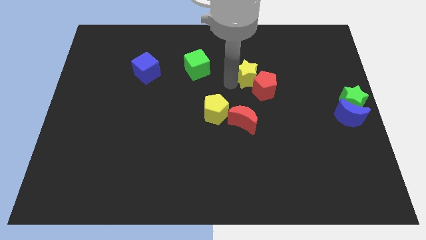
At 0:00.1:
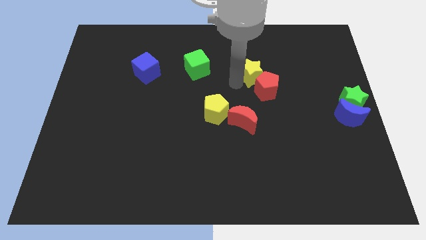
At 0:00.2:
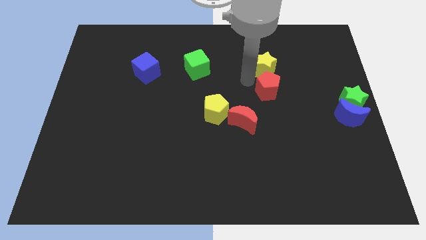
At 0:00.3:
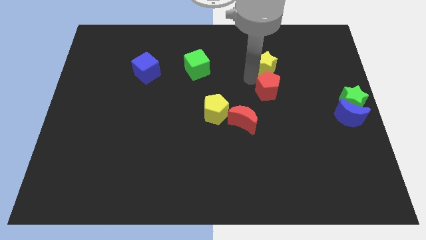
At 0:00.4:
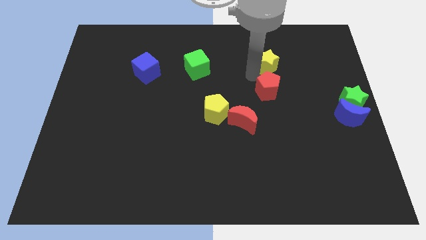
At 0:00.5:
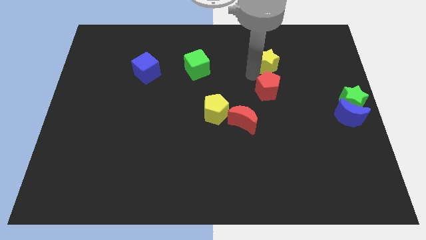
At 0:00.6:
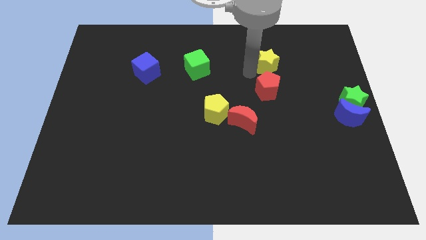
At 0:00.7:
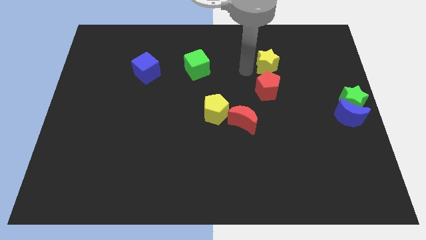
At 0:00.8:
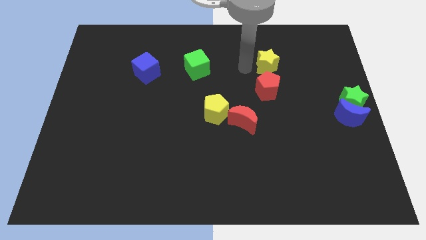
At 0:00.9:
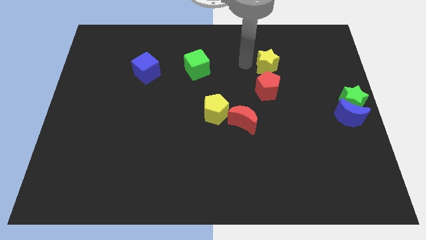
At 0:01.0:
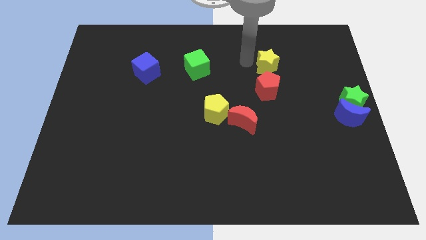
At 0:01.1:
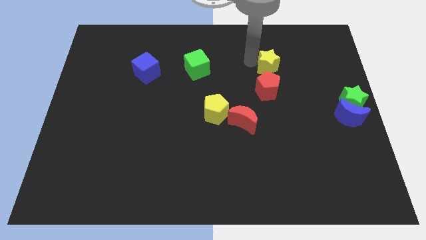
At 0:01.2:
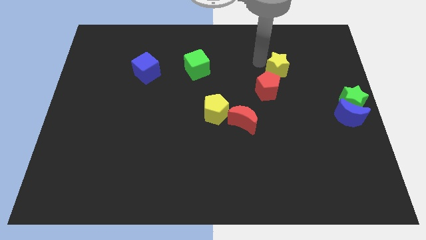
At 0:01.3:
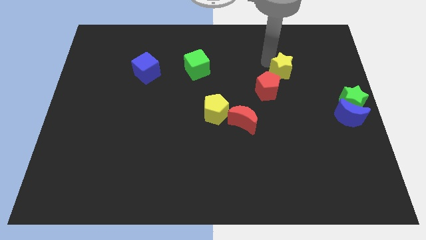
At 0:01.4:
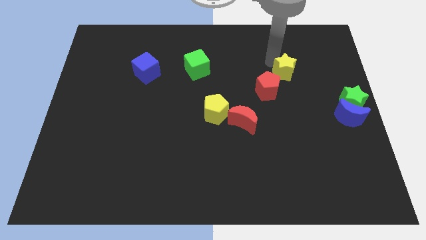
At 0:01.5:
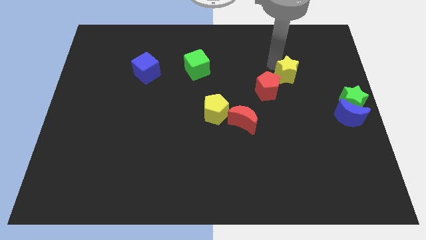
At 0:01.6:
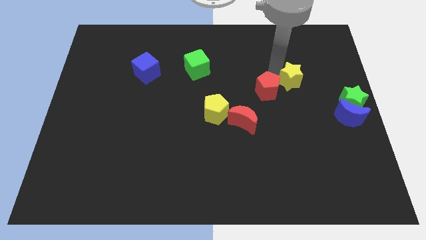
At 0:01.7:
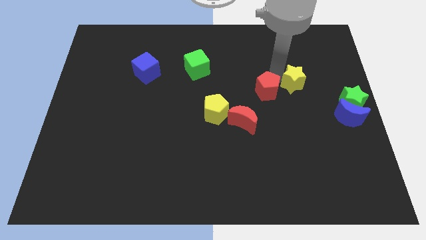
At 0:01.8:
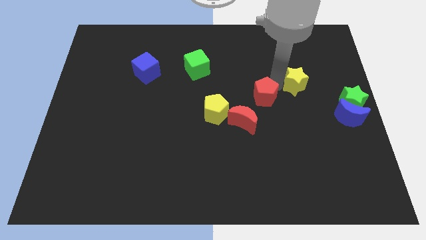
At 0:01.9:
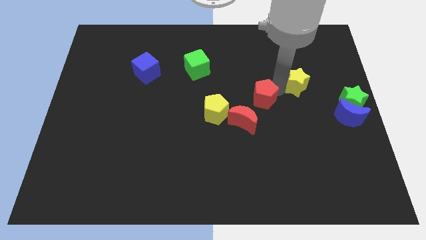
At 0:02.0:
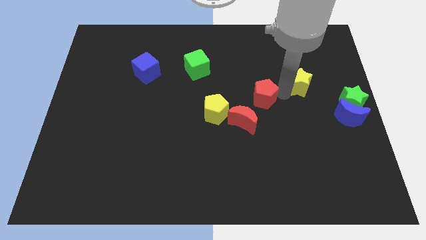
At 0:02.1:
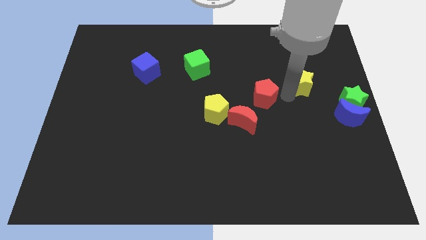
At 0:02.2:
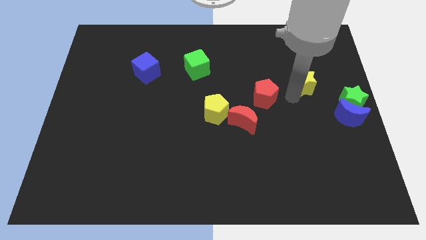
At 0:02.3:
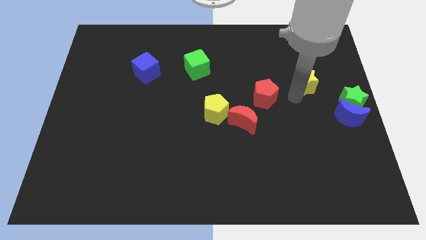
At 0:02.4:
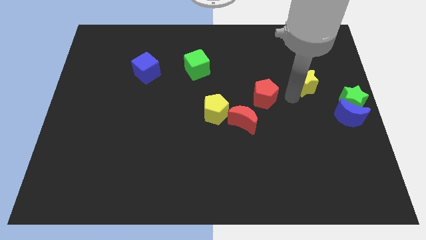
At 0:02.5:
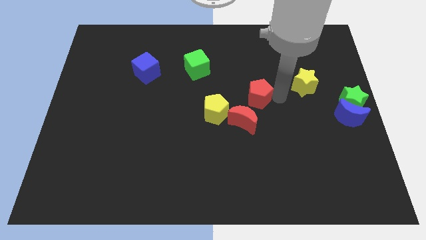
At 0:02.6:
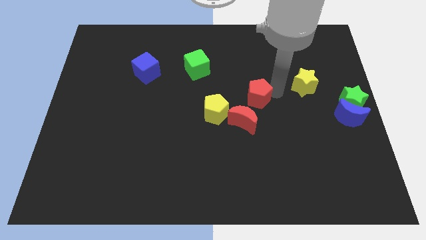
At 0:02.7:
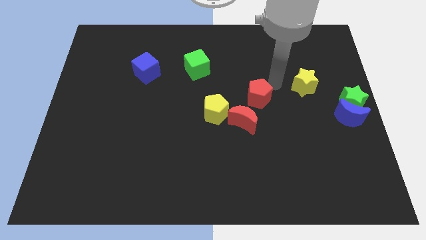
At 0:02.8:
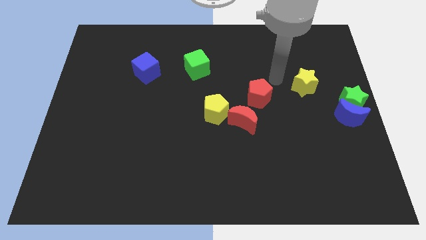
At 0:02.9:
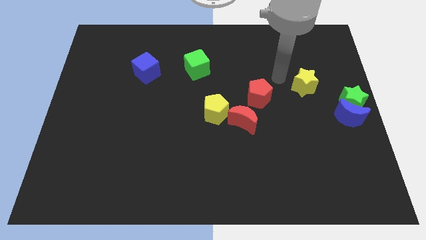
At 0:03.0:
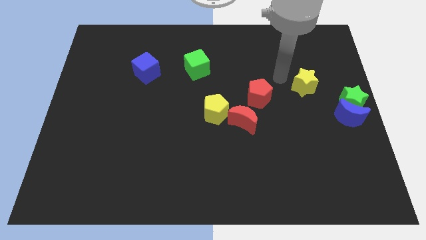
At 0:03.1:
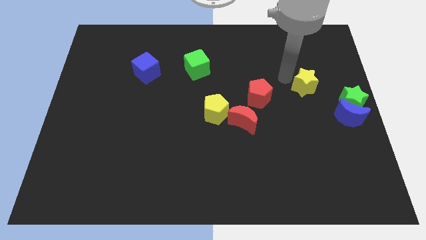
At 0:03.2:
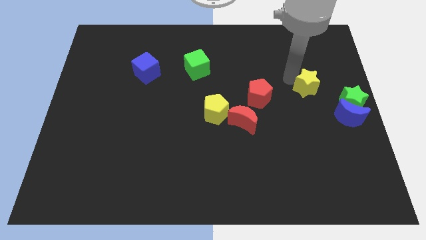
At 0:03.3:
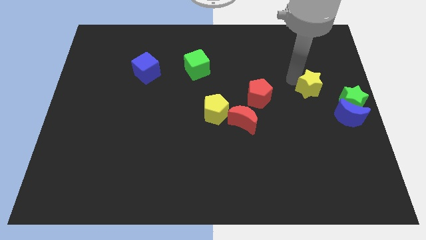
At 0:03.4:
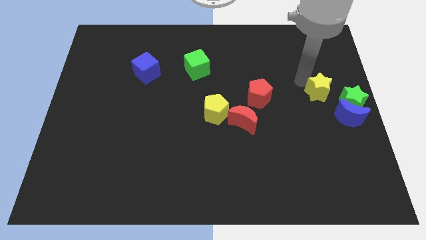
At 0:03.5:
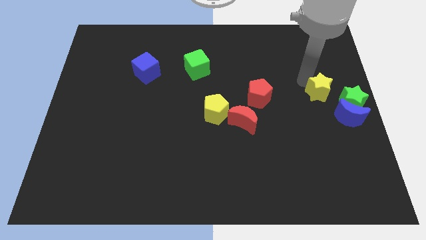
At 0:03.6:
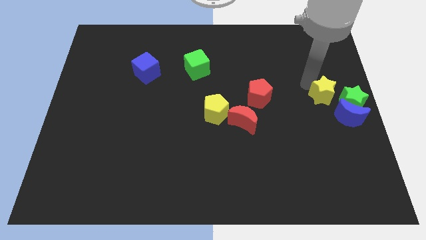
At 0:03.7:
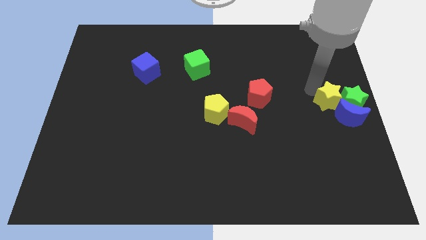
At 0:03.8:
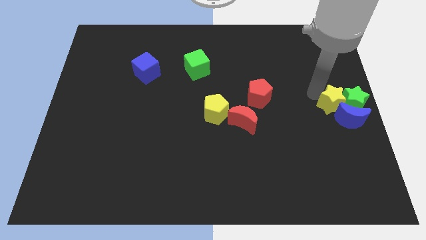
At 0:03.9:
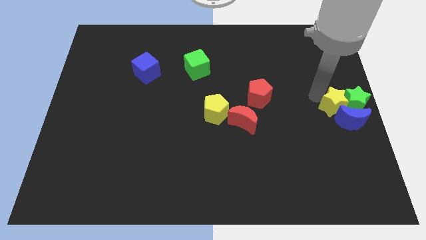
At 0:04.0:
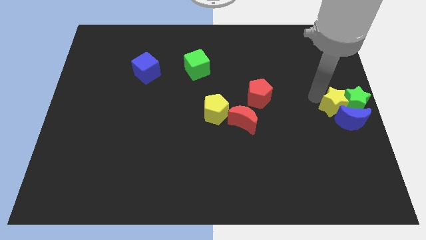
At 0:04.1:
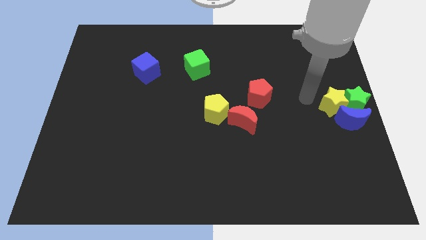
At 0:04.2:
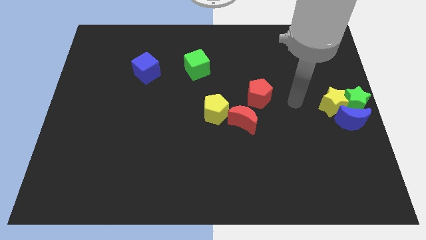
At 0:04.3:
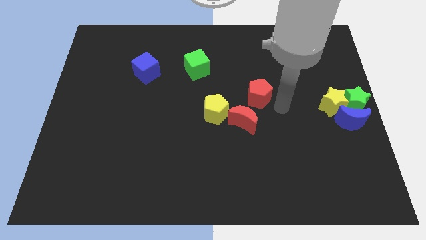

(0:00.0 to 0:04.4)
move the yellow star into the green star

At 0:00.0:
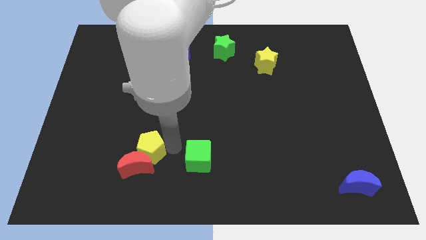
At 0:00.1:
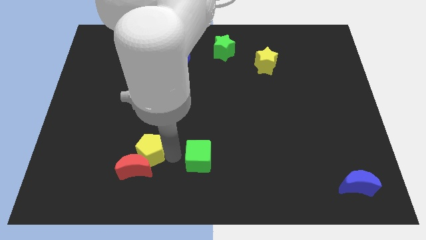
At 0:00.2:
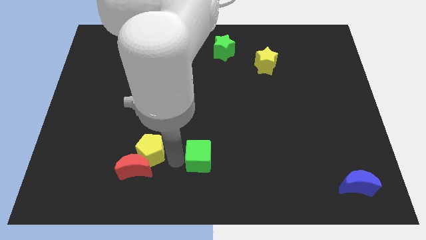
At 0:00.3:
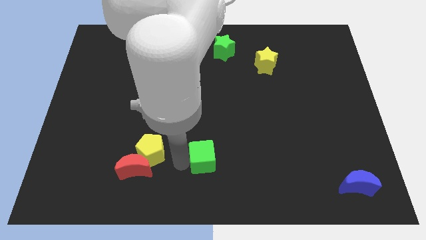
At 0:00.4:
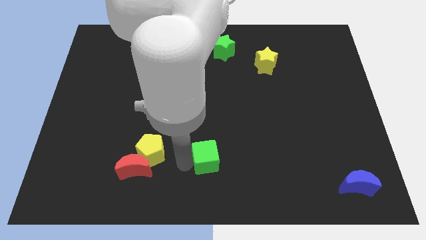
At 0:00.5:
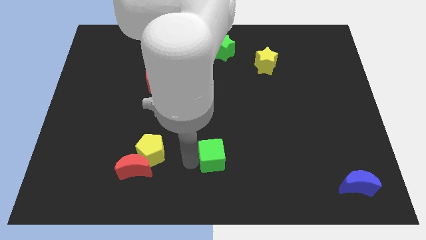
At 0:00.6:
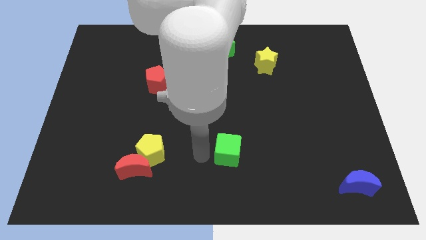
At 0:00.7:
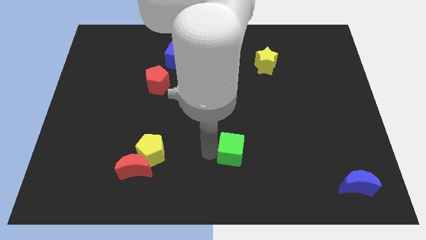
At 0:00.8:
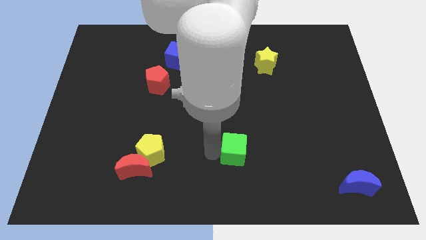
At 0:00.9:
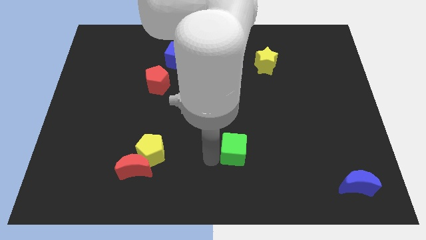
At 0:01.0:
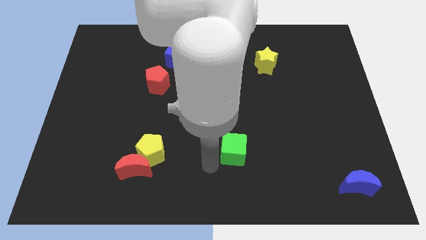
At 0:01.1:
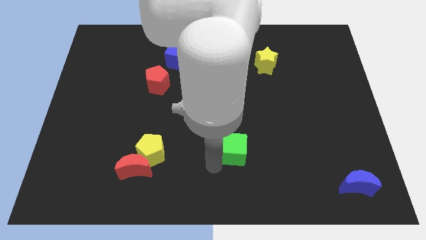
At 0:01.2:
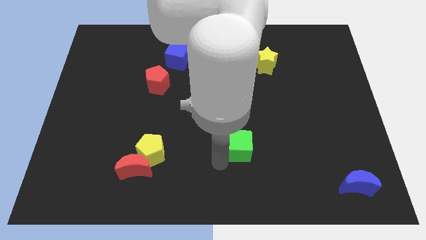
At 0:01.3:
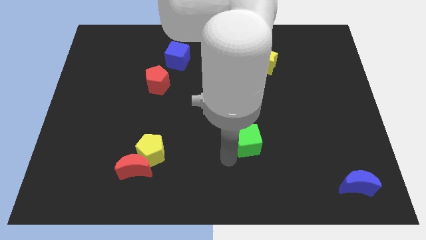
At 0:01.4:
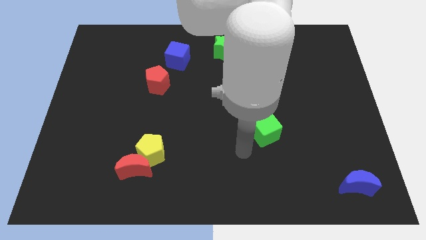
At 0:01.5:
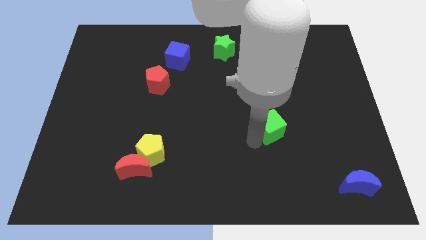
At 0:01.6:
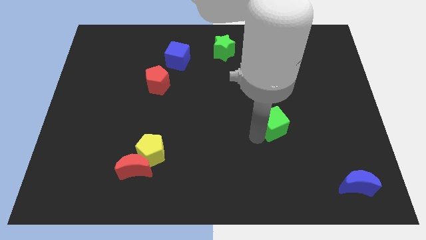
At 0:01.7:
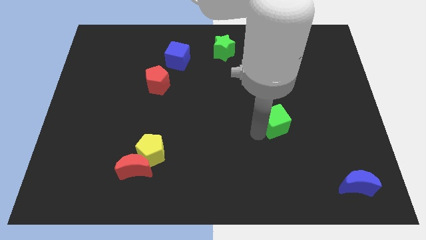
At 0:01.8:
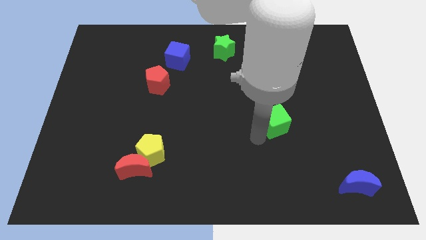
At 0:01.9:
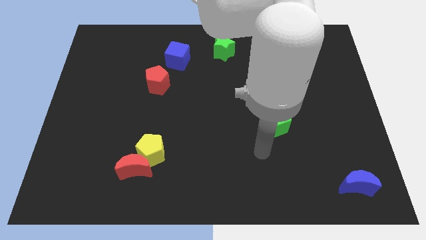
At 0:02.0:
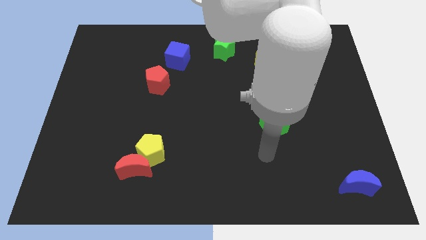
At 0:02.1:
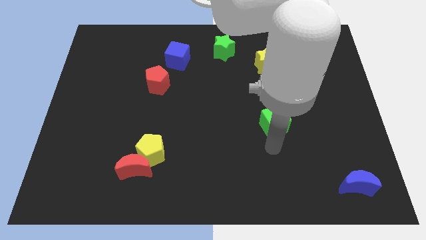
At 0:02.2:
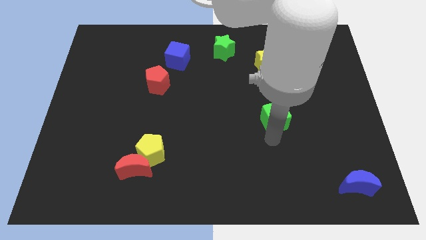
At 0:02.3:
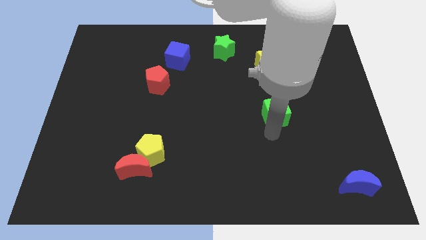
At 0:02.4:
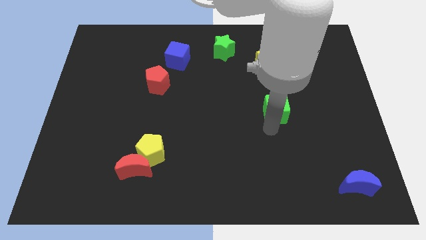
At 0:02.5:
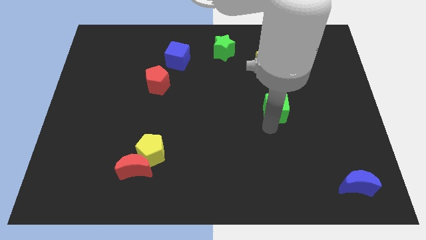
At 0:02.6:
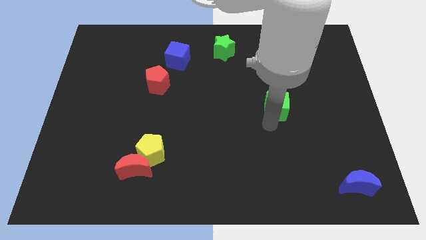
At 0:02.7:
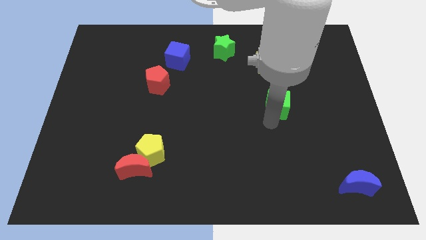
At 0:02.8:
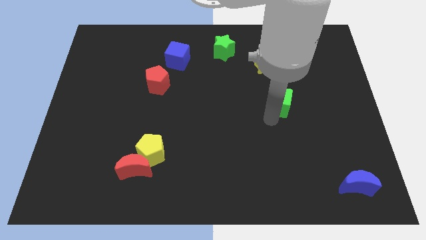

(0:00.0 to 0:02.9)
place the green cube below the yellow star

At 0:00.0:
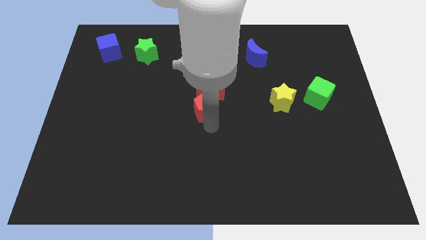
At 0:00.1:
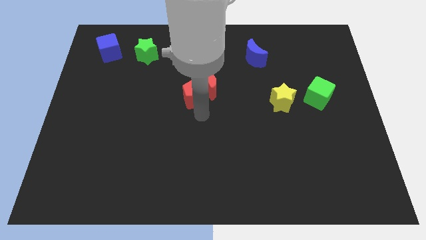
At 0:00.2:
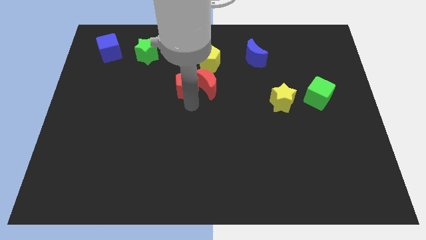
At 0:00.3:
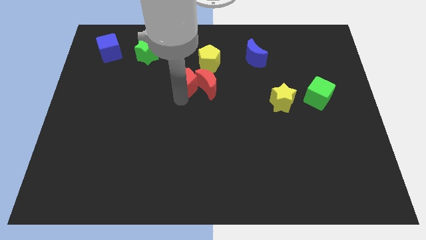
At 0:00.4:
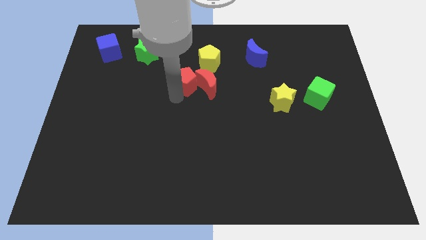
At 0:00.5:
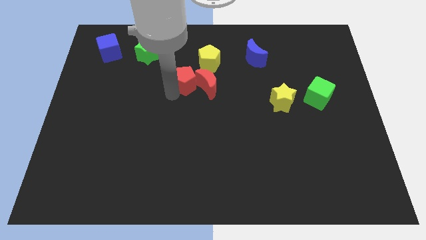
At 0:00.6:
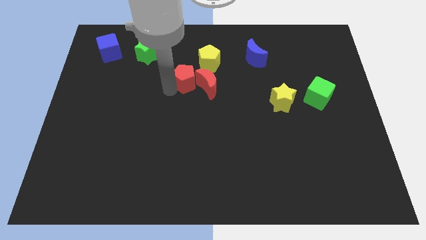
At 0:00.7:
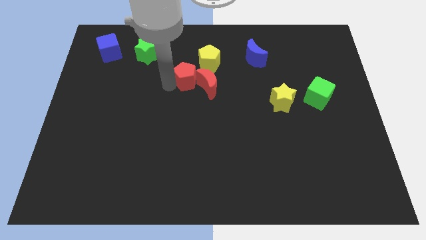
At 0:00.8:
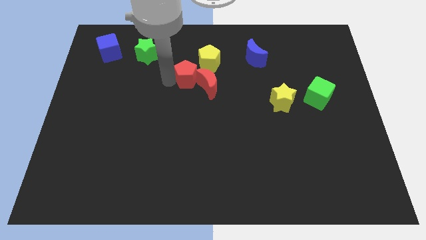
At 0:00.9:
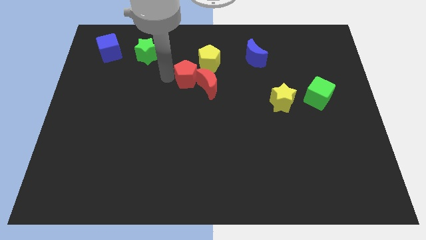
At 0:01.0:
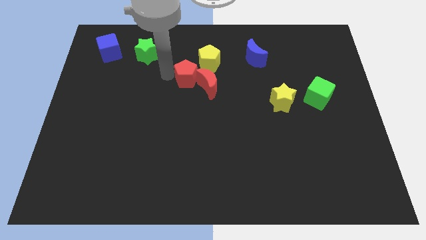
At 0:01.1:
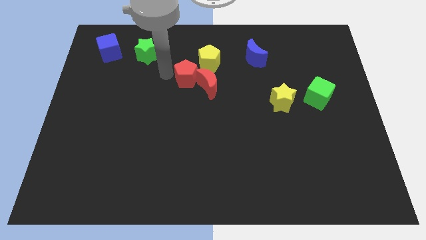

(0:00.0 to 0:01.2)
slightly move the red pentagon towards up

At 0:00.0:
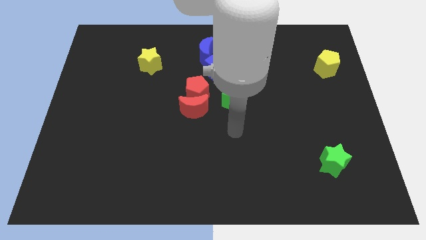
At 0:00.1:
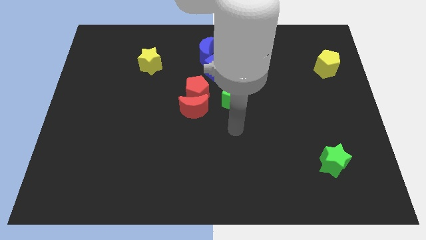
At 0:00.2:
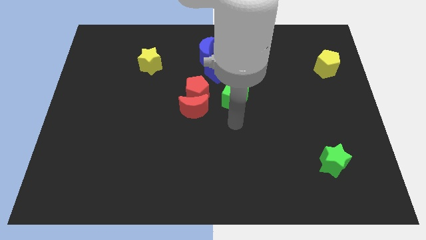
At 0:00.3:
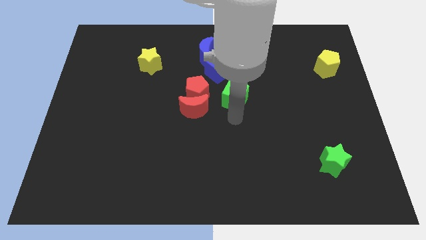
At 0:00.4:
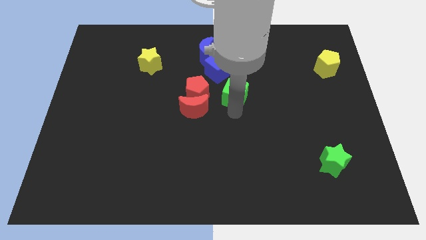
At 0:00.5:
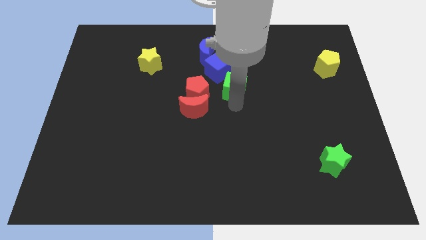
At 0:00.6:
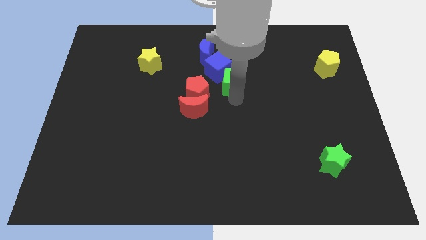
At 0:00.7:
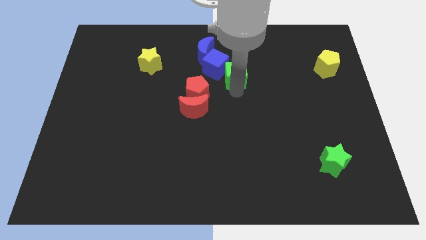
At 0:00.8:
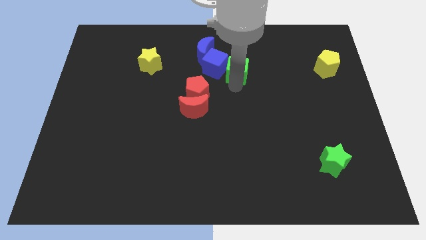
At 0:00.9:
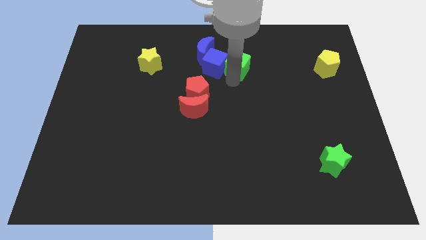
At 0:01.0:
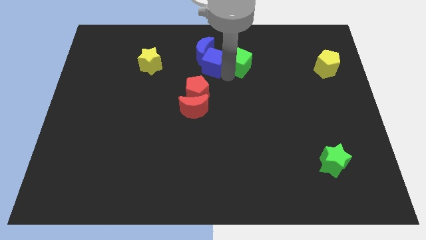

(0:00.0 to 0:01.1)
move green cube to the right of blue cube
